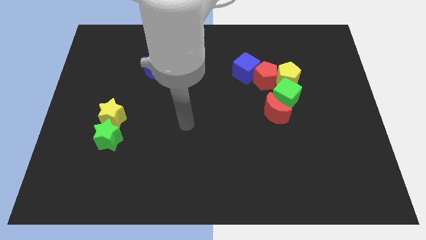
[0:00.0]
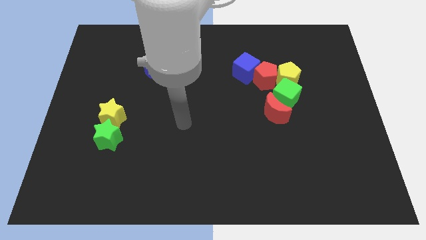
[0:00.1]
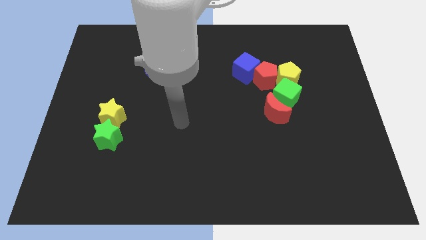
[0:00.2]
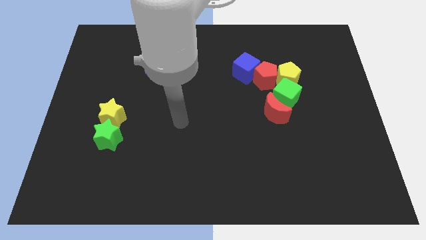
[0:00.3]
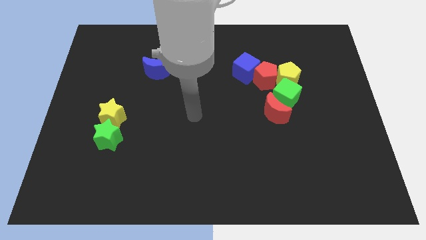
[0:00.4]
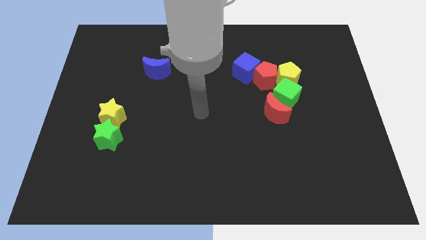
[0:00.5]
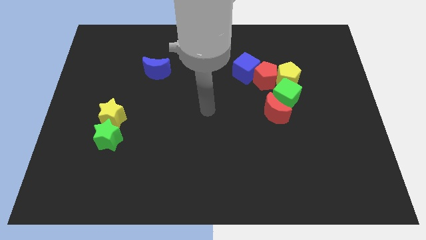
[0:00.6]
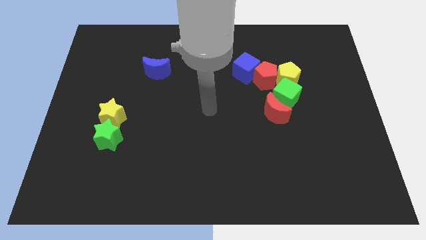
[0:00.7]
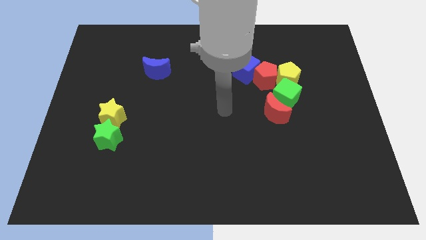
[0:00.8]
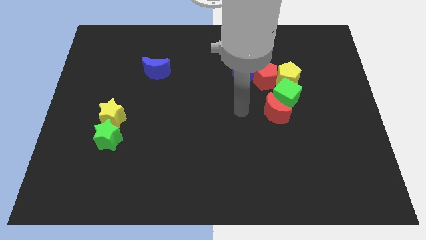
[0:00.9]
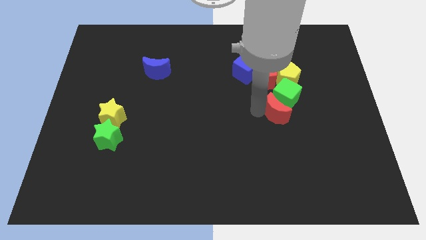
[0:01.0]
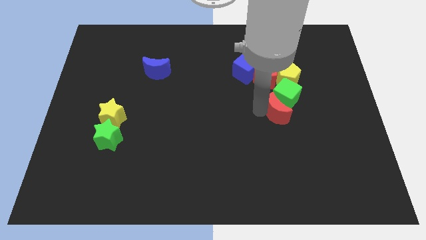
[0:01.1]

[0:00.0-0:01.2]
move arm close to the red moon

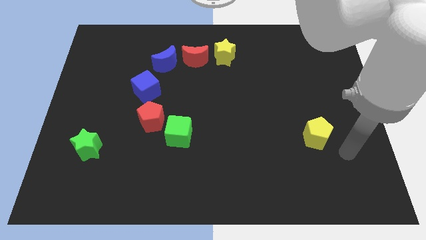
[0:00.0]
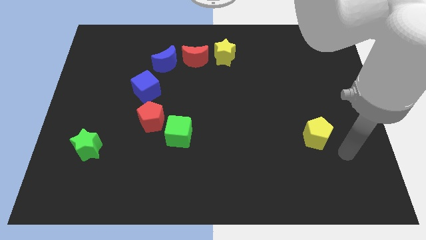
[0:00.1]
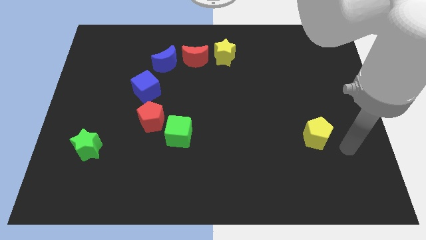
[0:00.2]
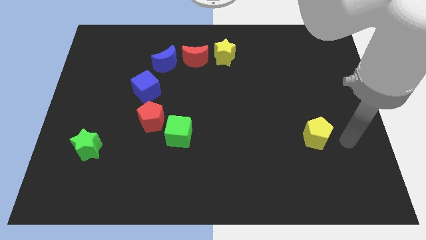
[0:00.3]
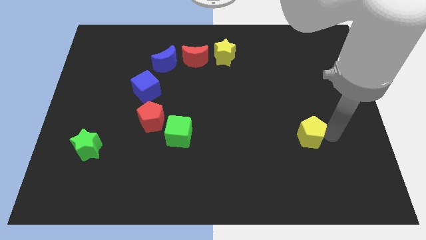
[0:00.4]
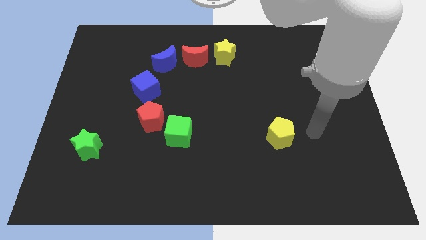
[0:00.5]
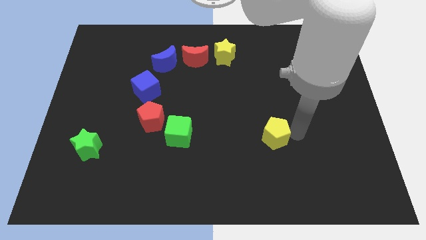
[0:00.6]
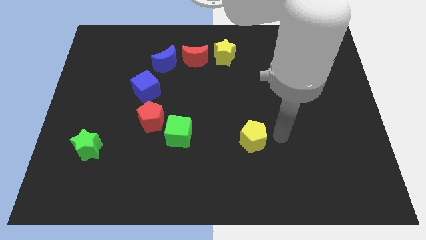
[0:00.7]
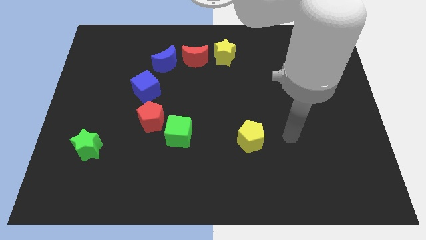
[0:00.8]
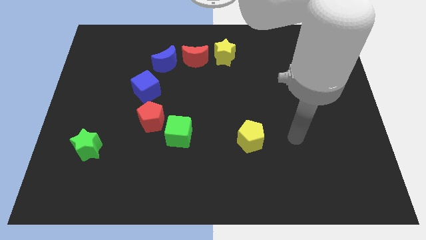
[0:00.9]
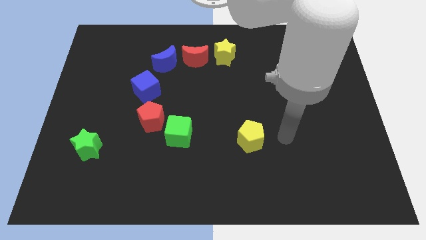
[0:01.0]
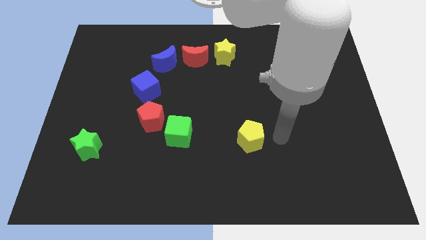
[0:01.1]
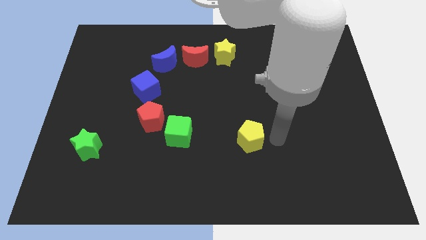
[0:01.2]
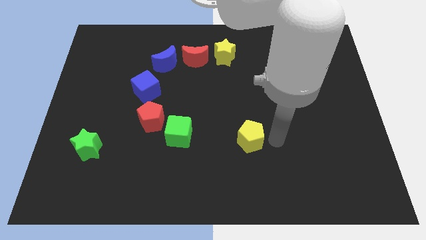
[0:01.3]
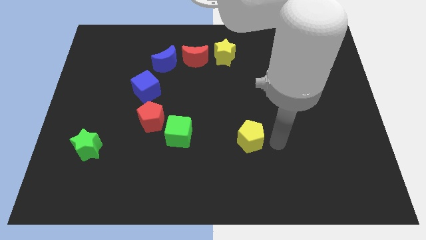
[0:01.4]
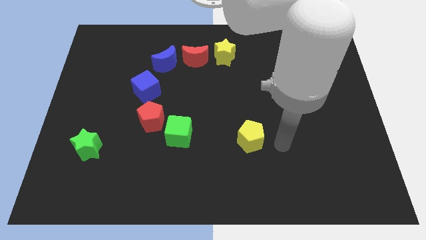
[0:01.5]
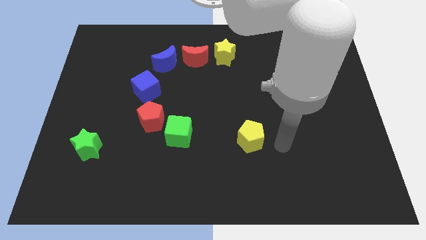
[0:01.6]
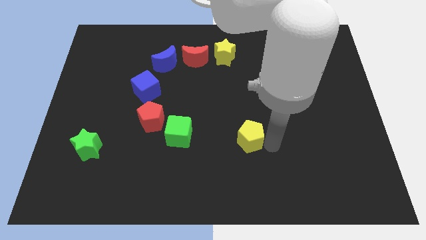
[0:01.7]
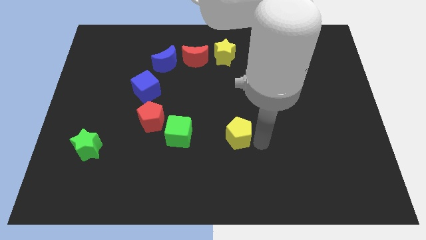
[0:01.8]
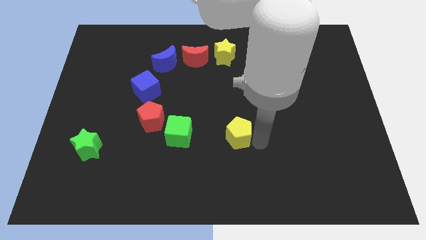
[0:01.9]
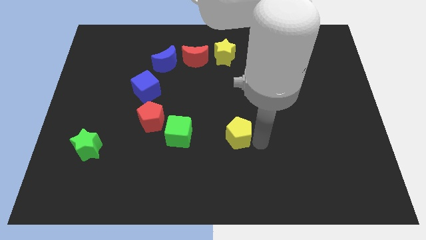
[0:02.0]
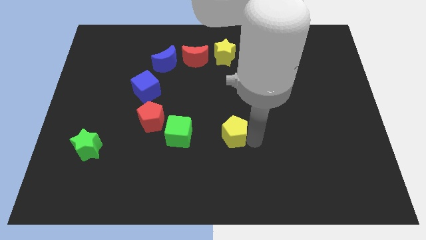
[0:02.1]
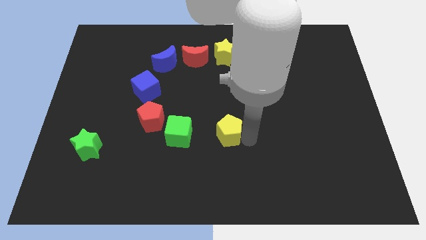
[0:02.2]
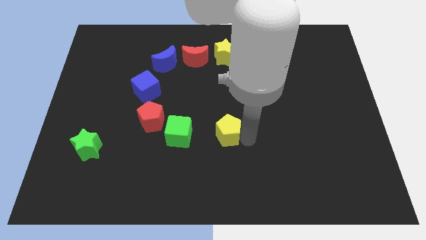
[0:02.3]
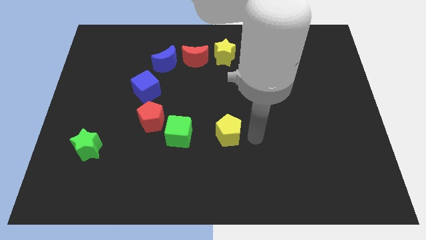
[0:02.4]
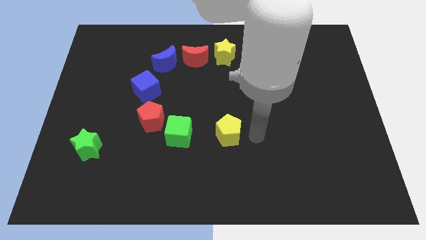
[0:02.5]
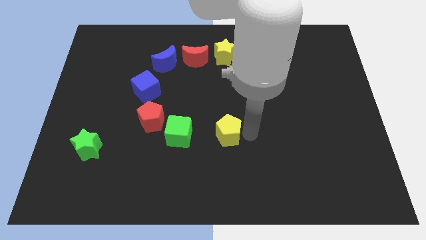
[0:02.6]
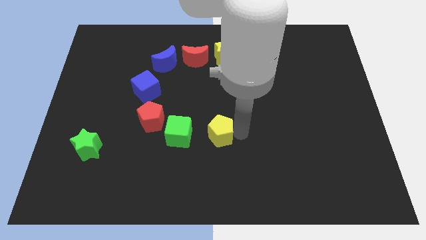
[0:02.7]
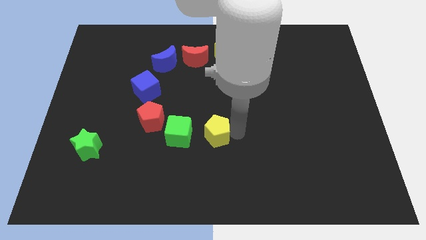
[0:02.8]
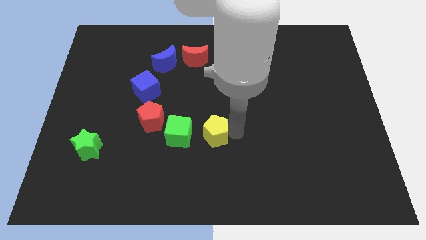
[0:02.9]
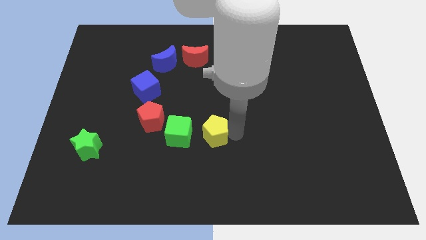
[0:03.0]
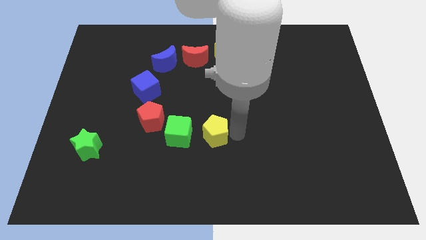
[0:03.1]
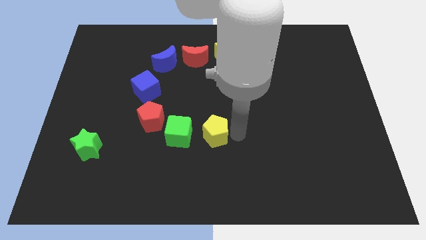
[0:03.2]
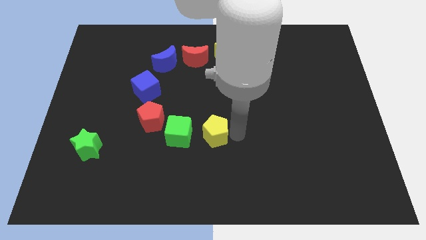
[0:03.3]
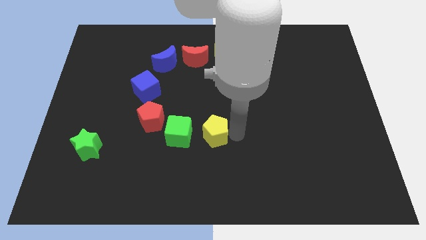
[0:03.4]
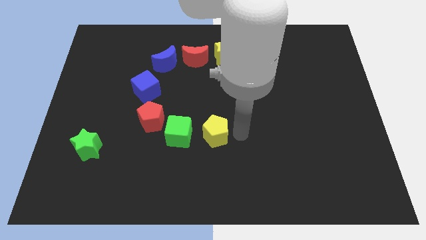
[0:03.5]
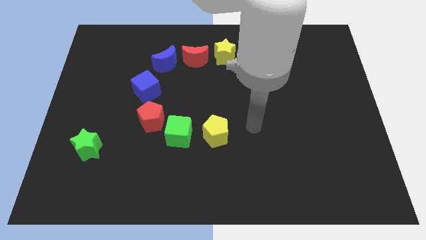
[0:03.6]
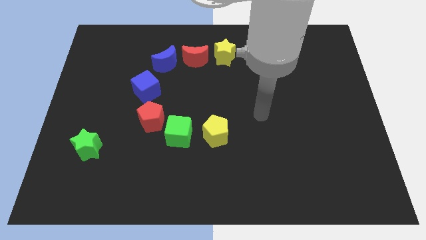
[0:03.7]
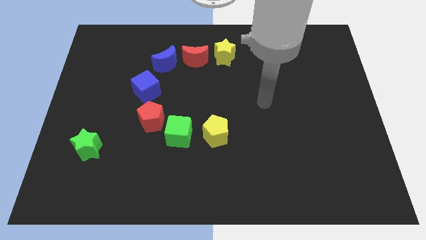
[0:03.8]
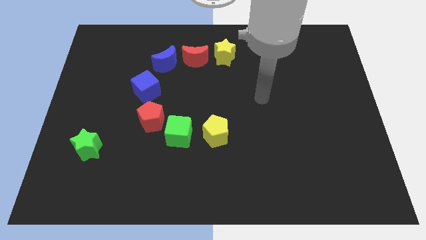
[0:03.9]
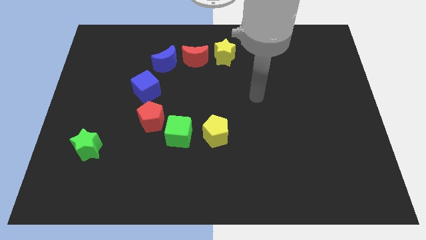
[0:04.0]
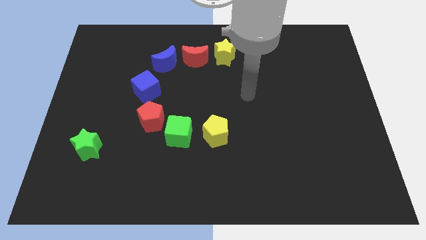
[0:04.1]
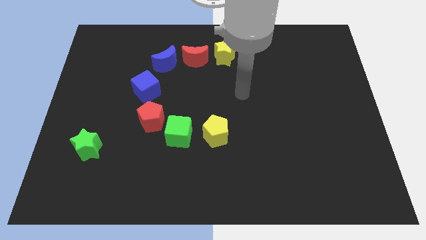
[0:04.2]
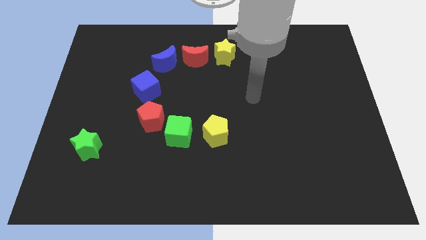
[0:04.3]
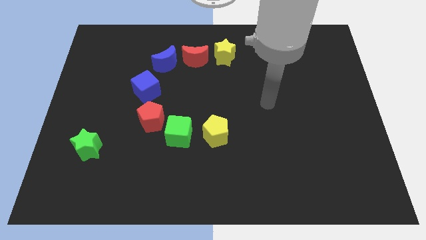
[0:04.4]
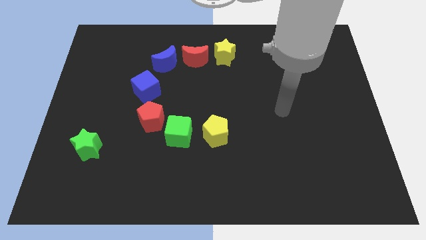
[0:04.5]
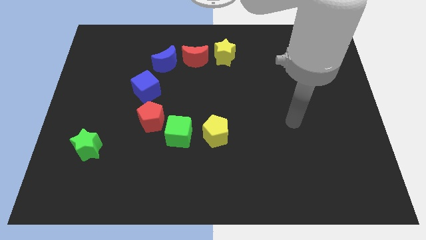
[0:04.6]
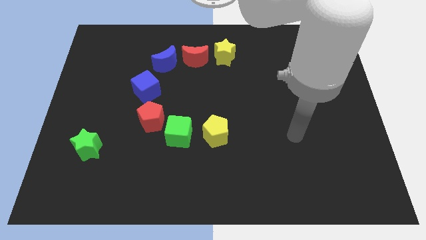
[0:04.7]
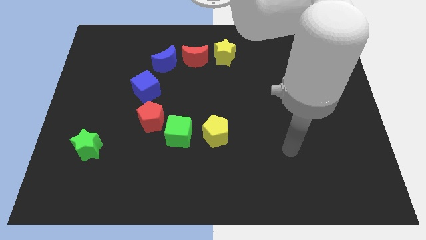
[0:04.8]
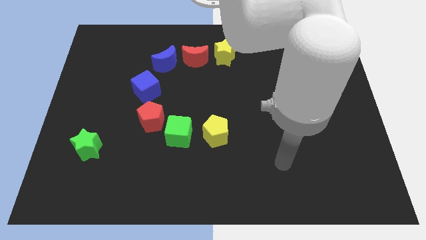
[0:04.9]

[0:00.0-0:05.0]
slide the yellow pentagon towards the green cube

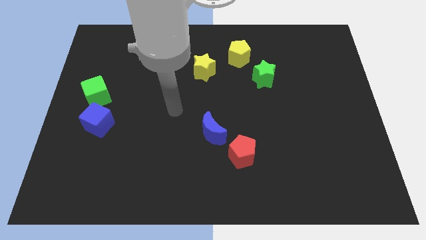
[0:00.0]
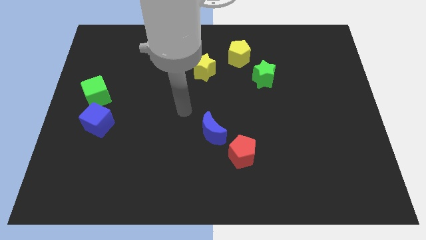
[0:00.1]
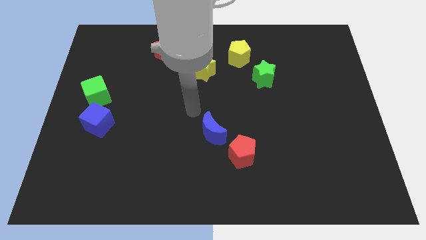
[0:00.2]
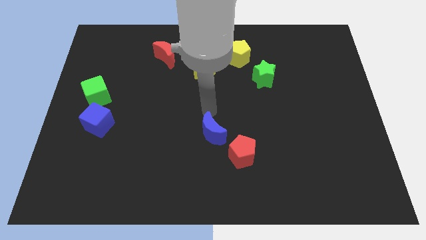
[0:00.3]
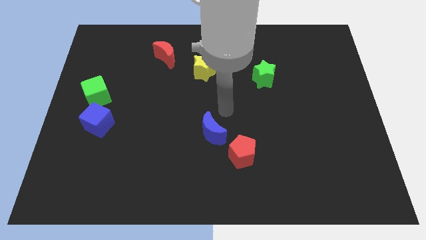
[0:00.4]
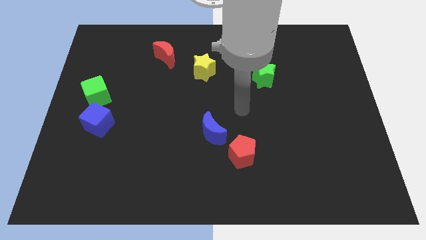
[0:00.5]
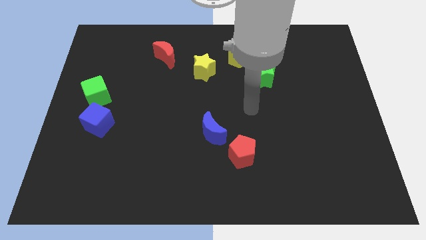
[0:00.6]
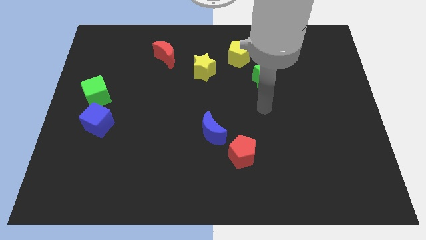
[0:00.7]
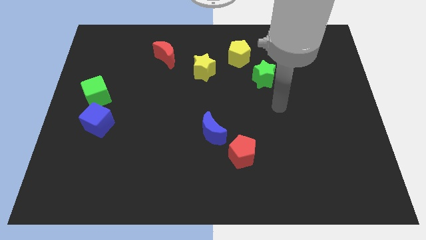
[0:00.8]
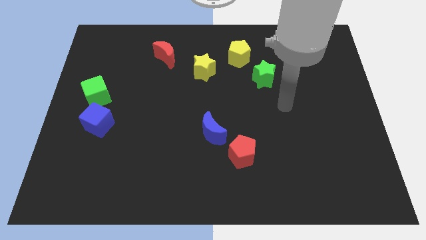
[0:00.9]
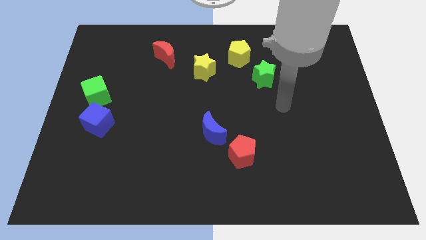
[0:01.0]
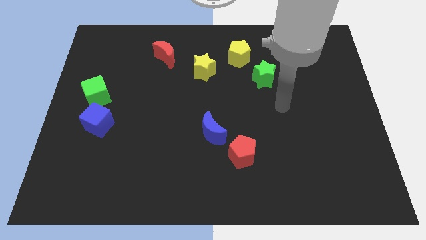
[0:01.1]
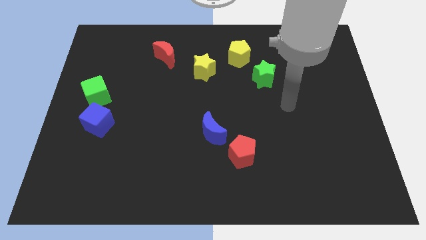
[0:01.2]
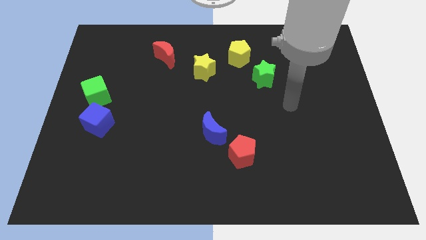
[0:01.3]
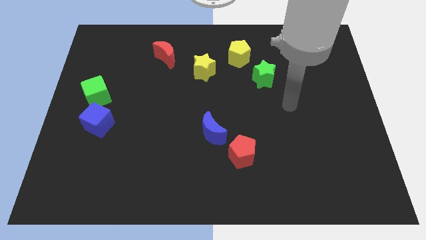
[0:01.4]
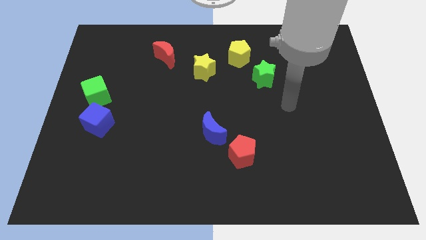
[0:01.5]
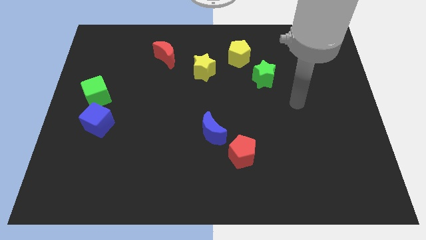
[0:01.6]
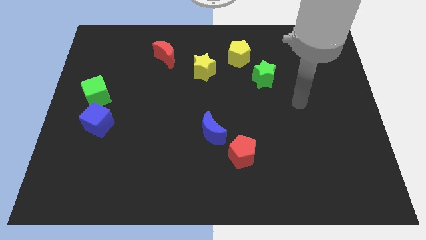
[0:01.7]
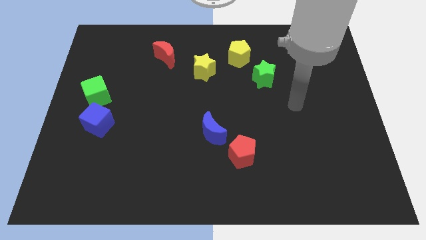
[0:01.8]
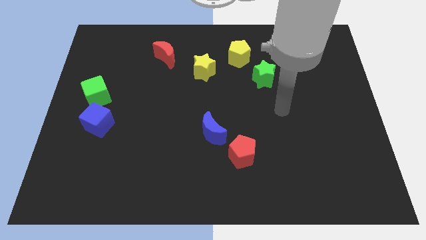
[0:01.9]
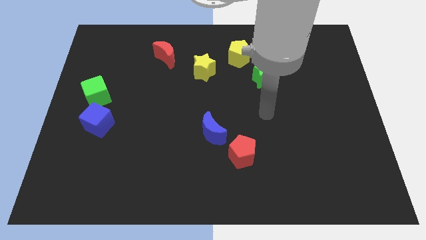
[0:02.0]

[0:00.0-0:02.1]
move the arm from left to right side

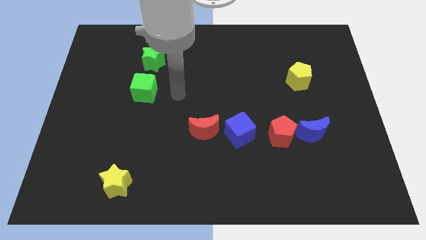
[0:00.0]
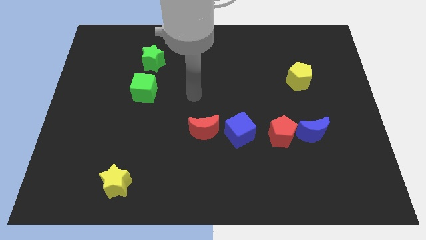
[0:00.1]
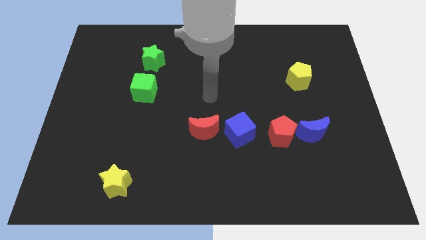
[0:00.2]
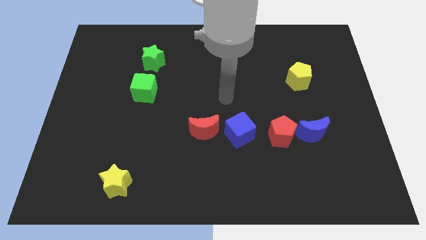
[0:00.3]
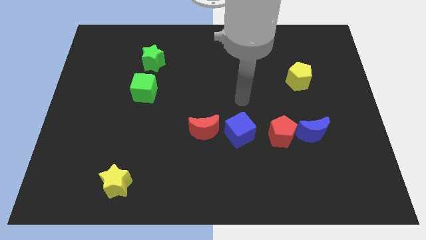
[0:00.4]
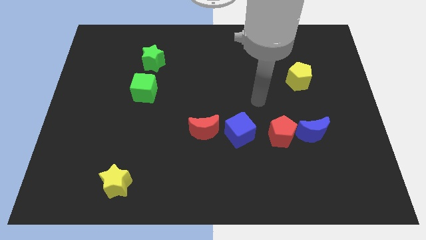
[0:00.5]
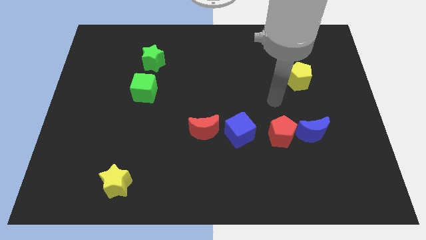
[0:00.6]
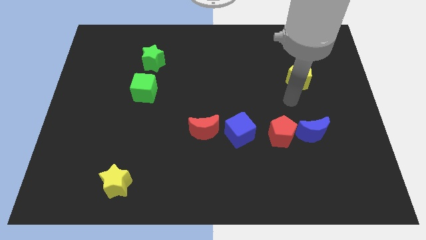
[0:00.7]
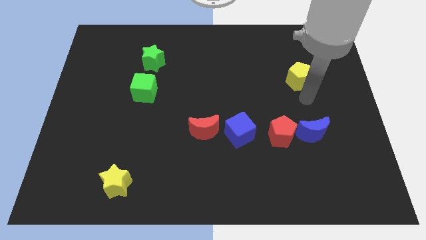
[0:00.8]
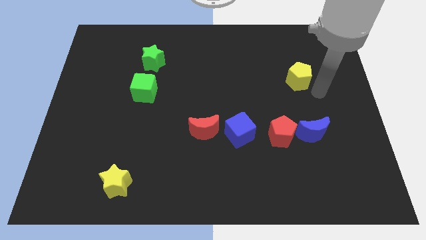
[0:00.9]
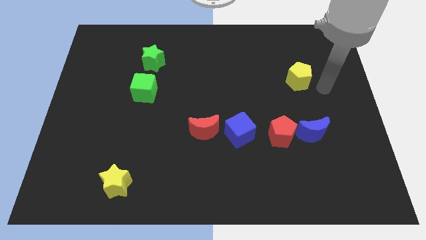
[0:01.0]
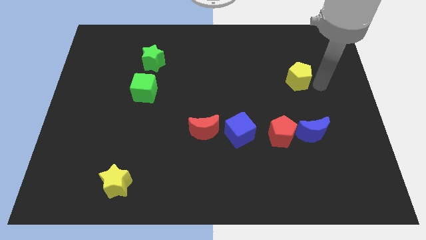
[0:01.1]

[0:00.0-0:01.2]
move the arm away from the green cube
